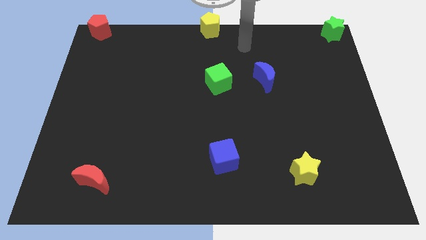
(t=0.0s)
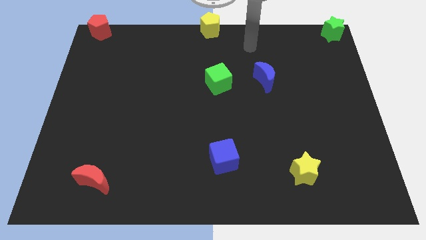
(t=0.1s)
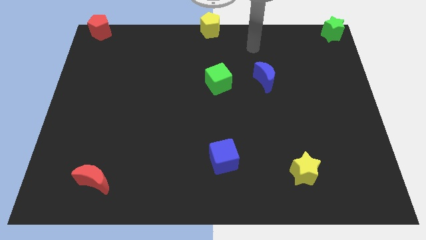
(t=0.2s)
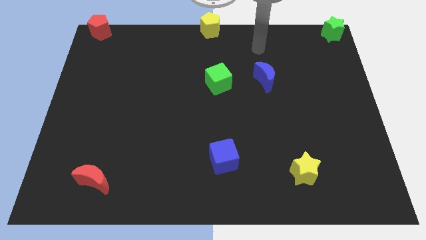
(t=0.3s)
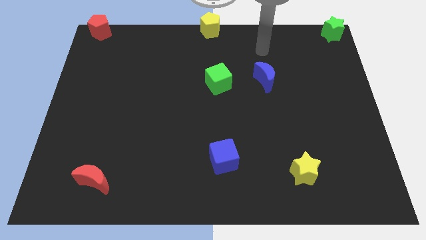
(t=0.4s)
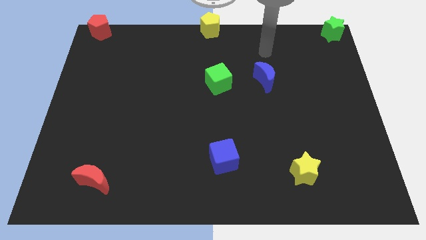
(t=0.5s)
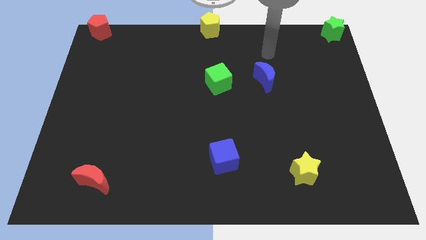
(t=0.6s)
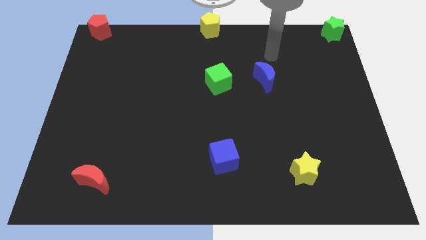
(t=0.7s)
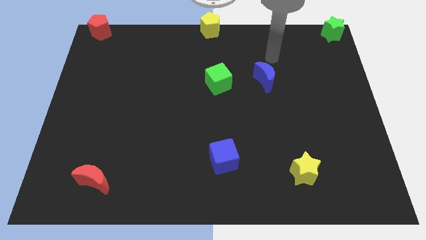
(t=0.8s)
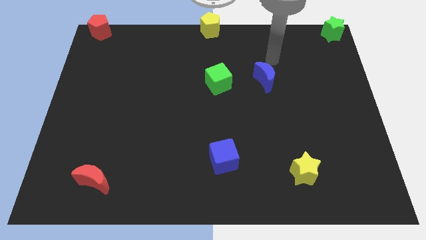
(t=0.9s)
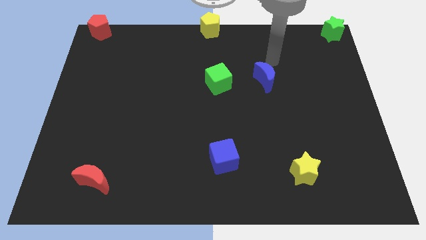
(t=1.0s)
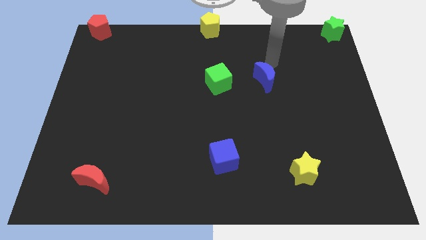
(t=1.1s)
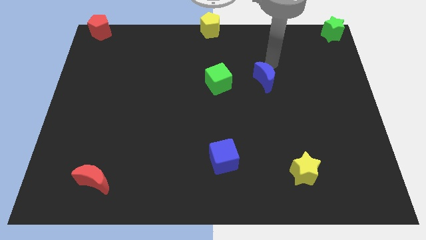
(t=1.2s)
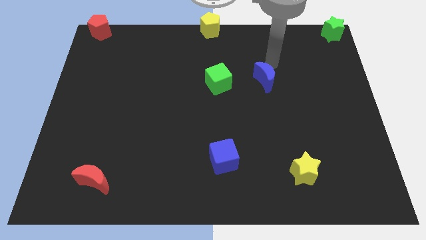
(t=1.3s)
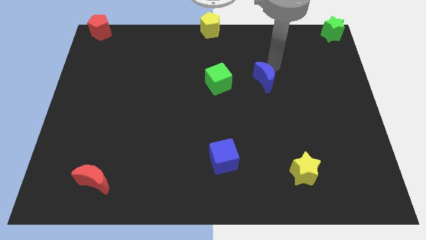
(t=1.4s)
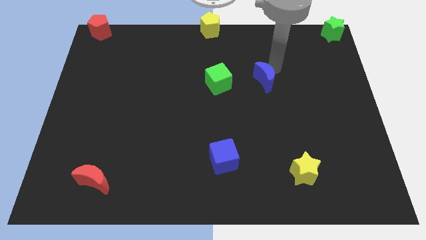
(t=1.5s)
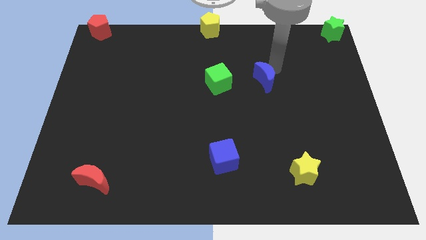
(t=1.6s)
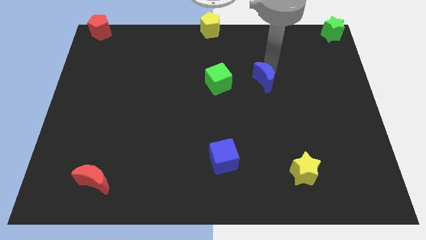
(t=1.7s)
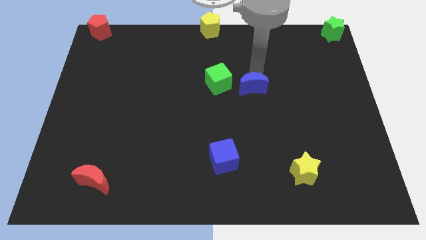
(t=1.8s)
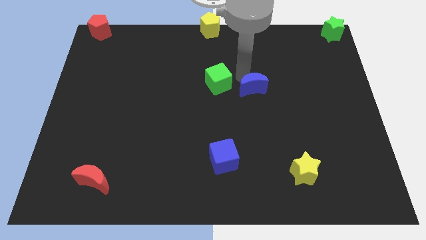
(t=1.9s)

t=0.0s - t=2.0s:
slightly push the blue moon towards the right side of green cube

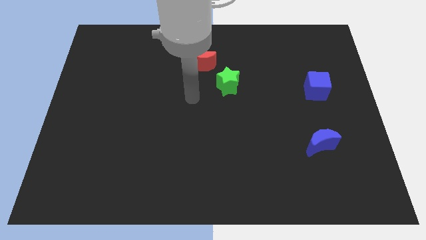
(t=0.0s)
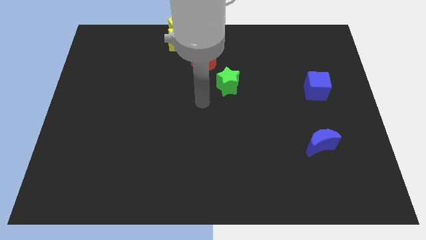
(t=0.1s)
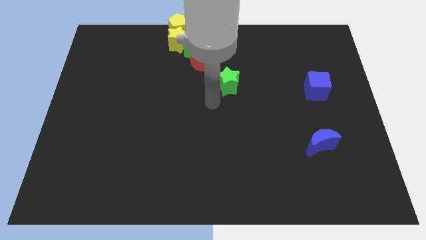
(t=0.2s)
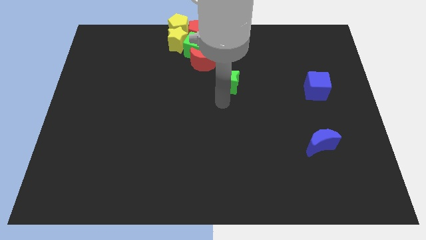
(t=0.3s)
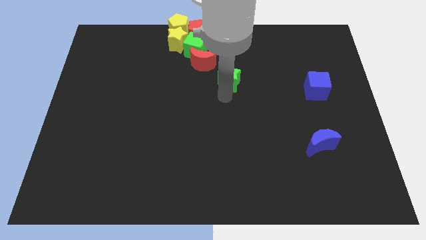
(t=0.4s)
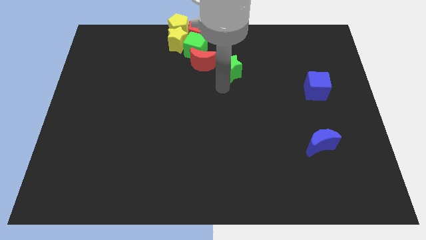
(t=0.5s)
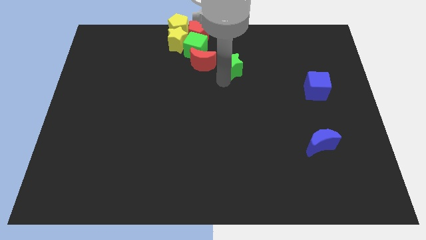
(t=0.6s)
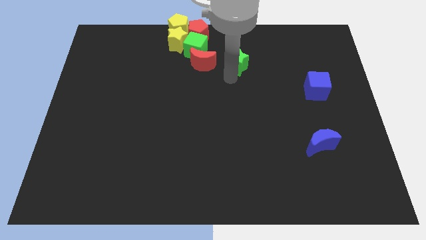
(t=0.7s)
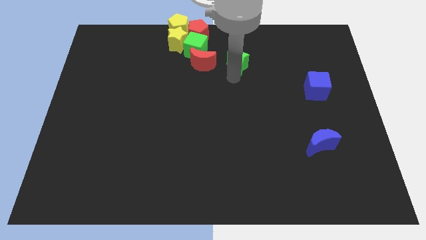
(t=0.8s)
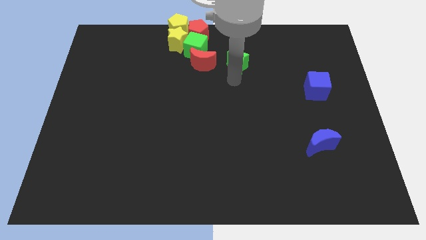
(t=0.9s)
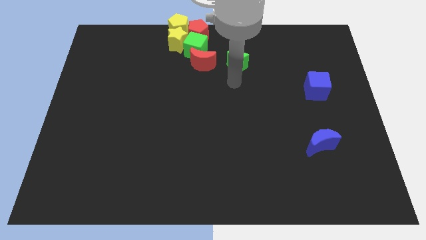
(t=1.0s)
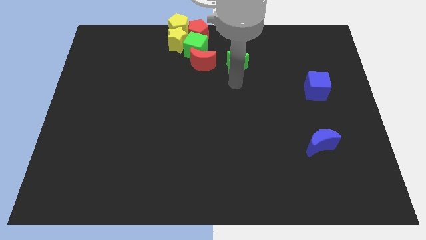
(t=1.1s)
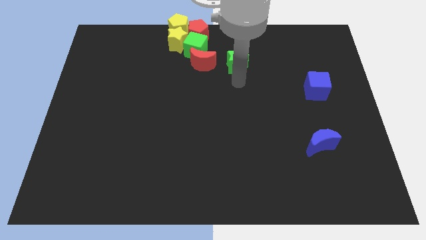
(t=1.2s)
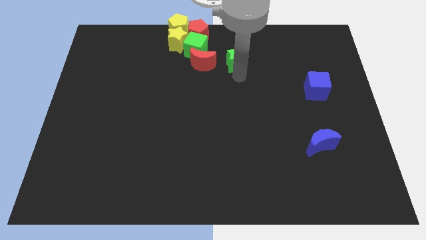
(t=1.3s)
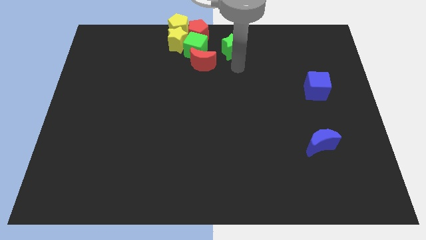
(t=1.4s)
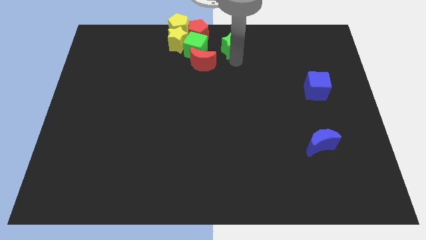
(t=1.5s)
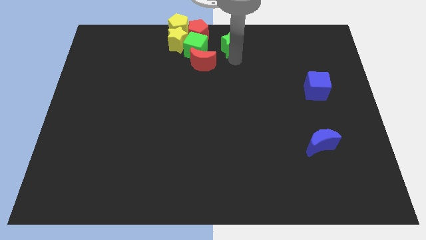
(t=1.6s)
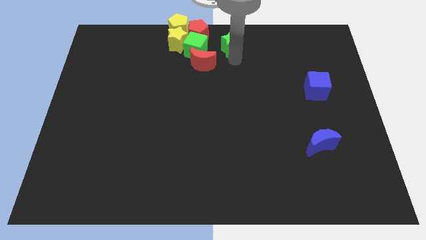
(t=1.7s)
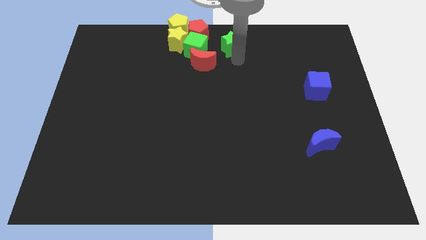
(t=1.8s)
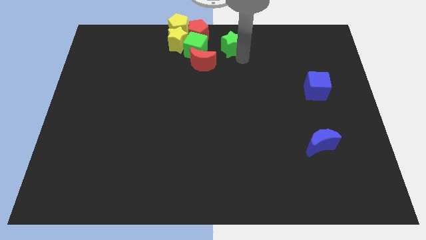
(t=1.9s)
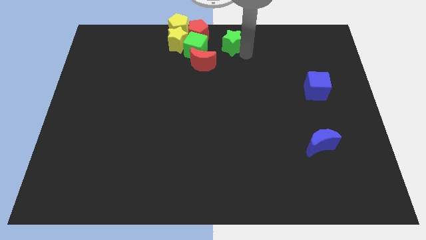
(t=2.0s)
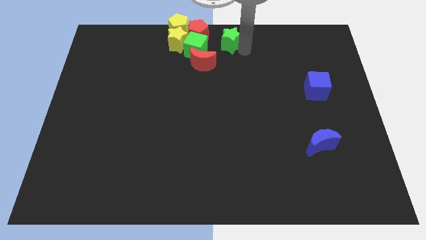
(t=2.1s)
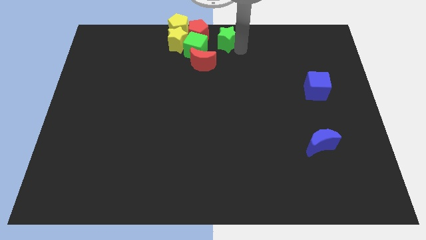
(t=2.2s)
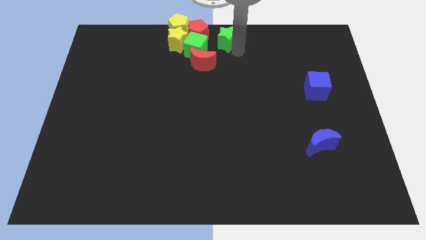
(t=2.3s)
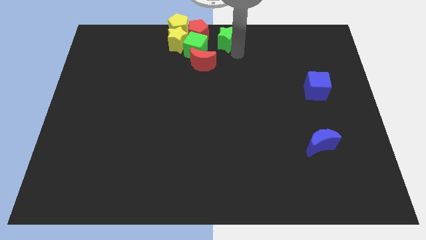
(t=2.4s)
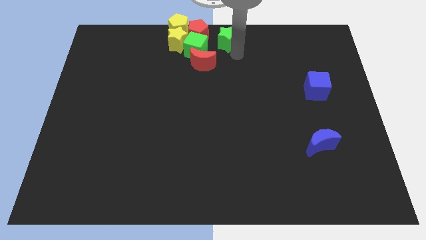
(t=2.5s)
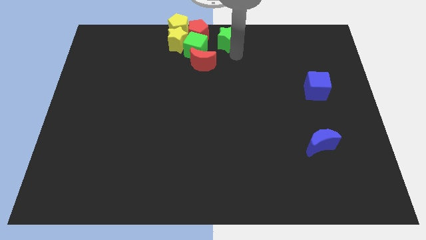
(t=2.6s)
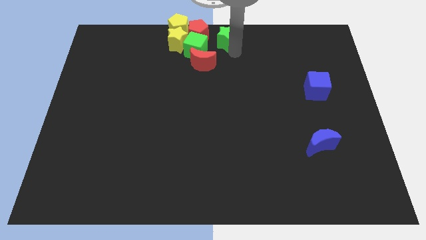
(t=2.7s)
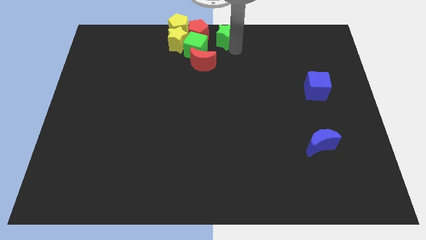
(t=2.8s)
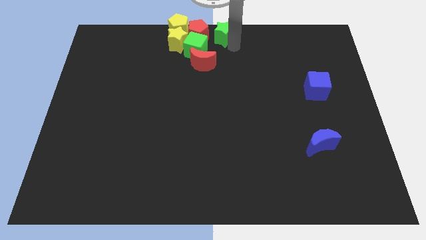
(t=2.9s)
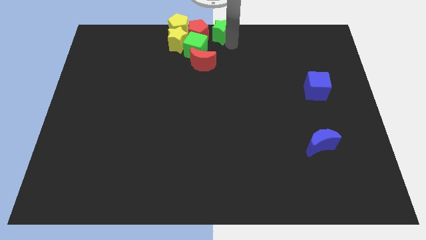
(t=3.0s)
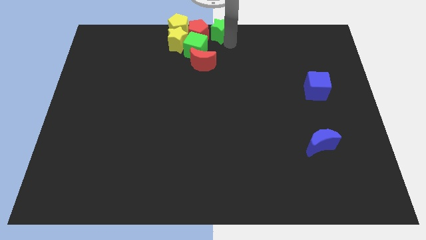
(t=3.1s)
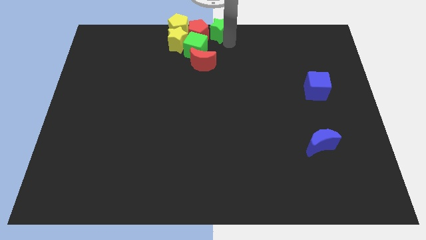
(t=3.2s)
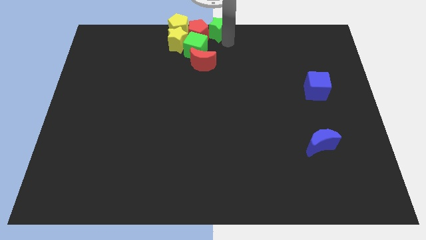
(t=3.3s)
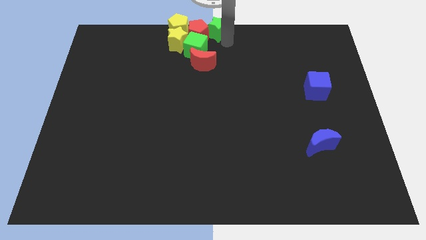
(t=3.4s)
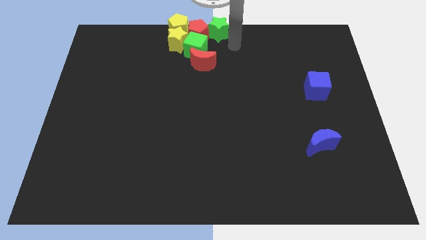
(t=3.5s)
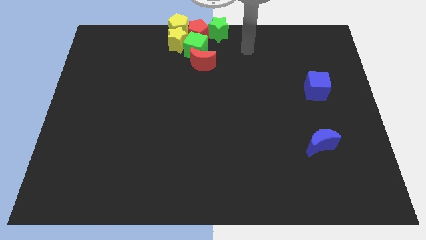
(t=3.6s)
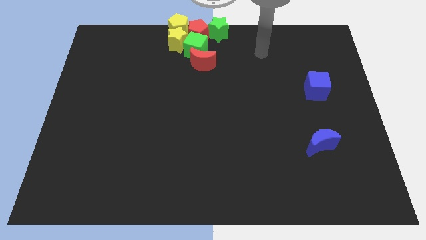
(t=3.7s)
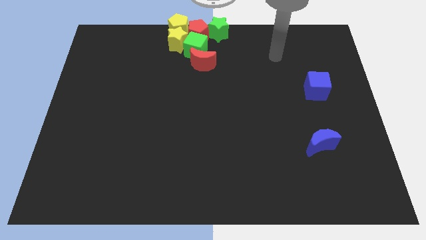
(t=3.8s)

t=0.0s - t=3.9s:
place the green star right to the red pentagon to form a horizontal line

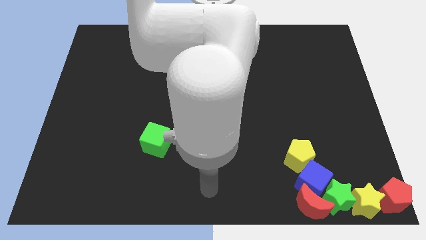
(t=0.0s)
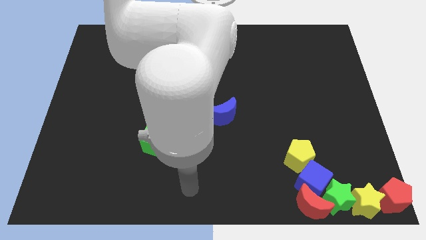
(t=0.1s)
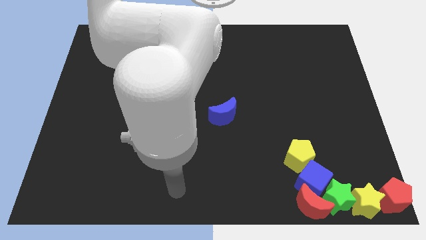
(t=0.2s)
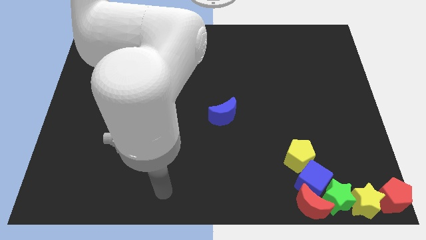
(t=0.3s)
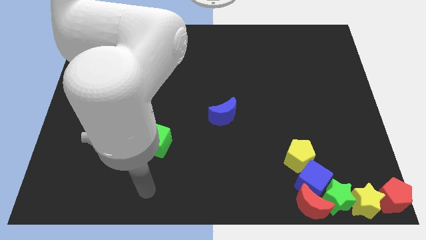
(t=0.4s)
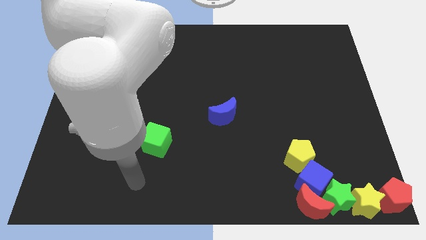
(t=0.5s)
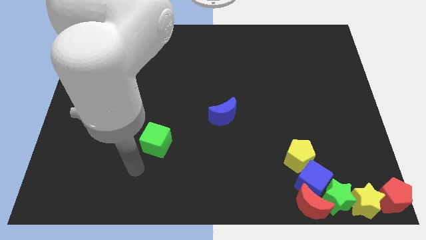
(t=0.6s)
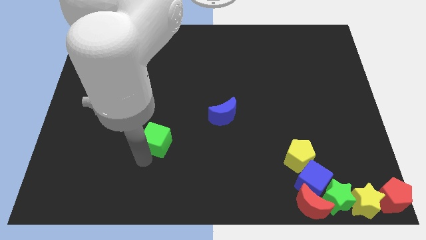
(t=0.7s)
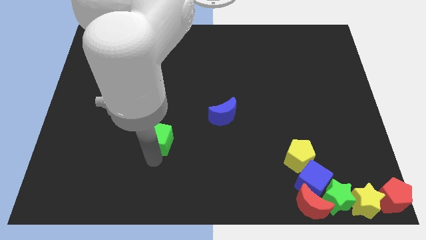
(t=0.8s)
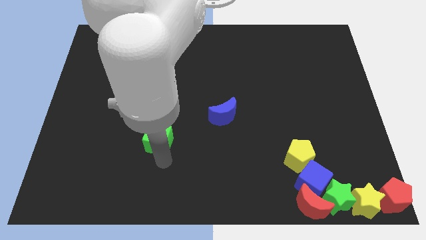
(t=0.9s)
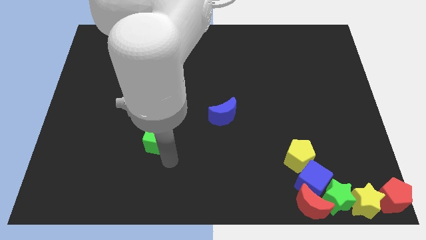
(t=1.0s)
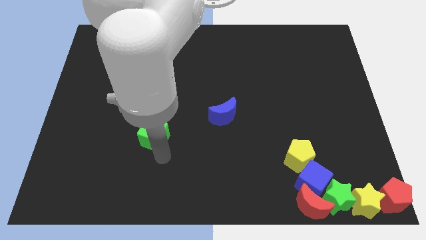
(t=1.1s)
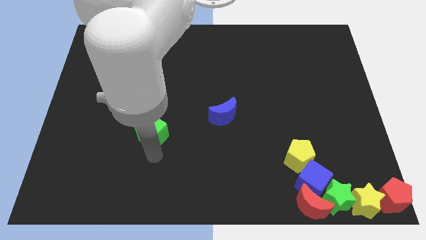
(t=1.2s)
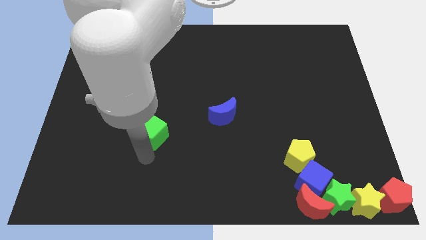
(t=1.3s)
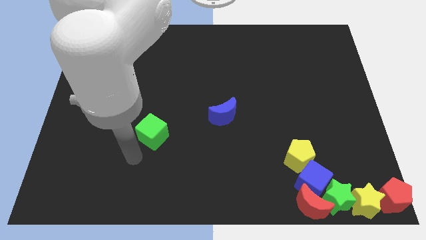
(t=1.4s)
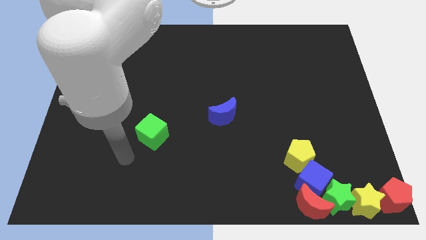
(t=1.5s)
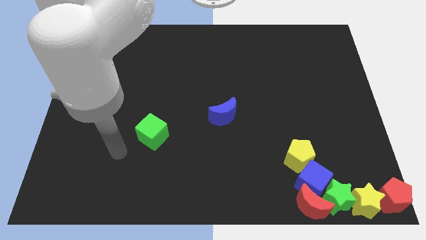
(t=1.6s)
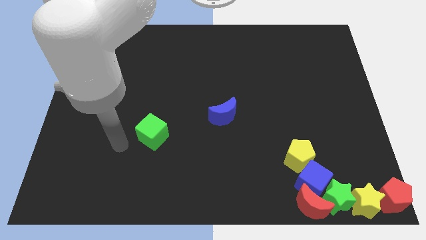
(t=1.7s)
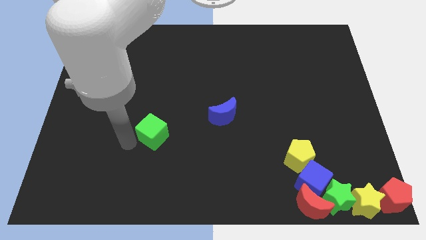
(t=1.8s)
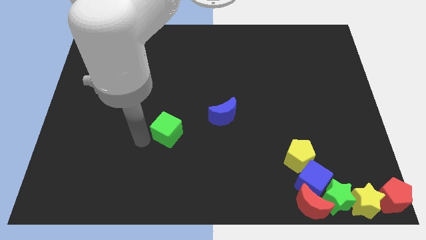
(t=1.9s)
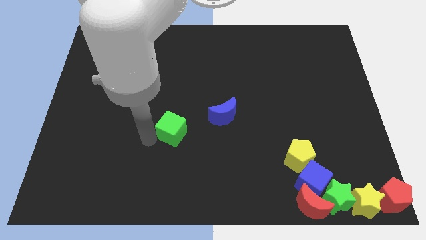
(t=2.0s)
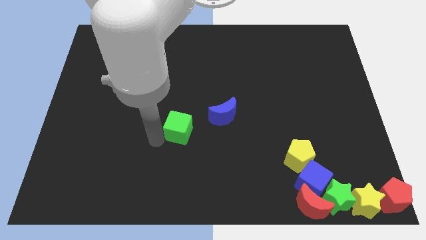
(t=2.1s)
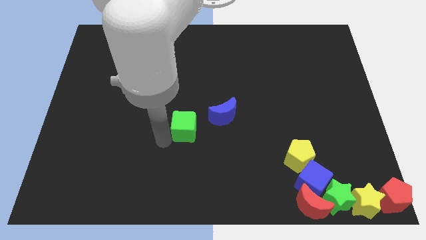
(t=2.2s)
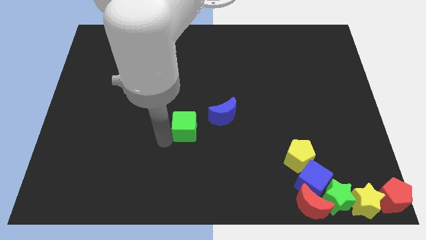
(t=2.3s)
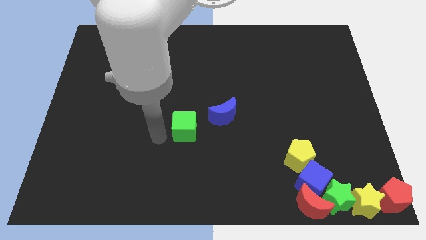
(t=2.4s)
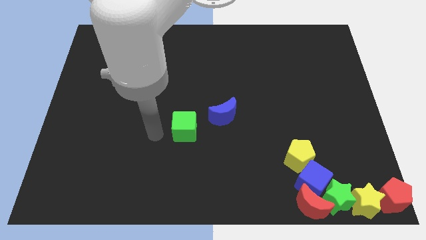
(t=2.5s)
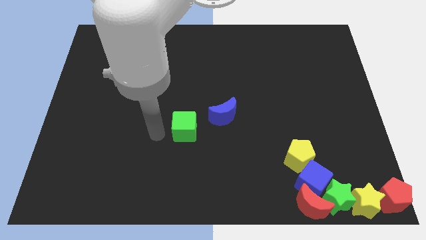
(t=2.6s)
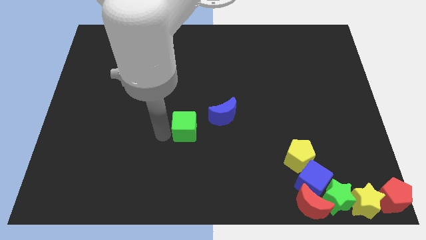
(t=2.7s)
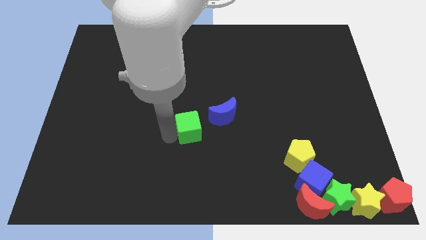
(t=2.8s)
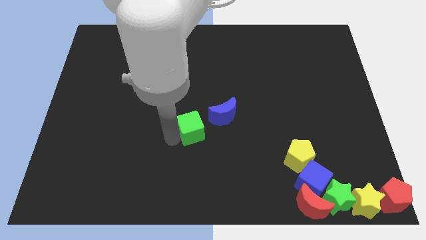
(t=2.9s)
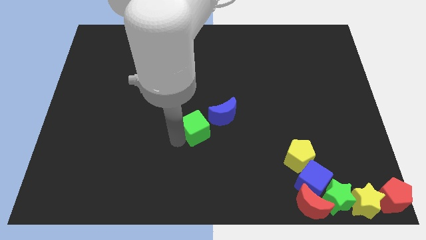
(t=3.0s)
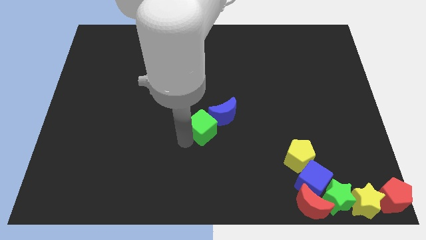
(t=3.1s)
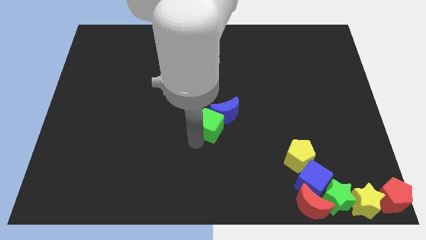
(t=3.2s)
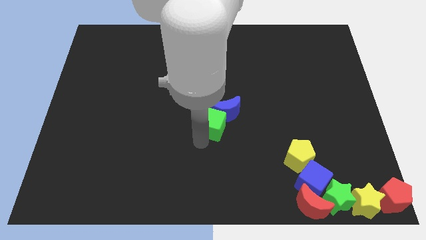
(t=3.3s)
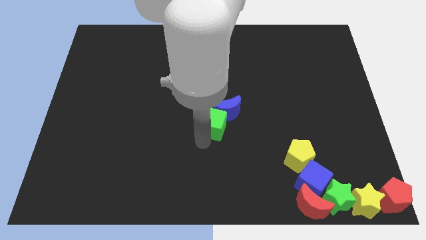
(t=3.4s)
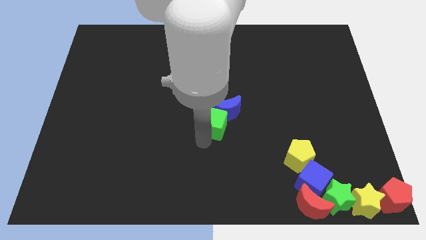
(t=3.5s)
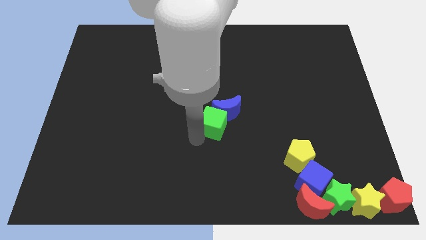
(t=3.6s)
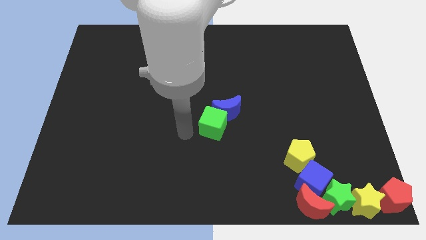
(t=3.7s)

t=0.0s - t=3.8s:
move the blue crescent with the green cube
